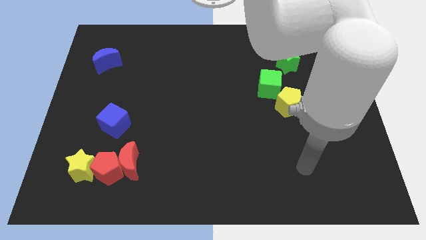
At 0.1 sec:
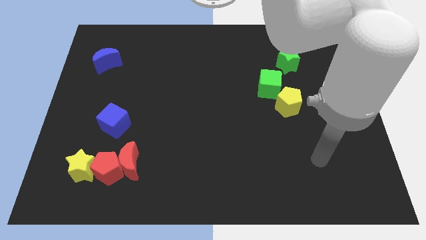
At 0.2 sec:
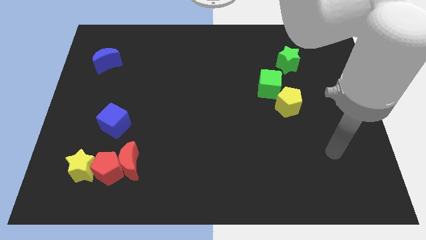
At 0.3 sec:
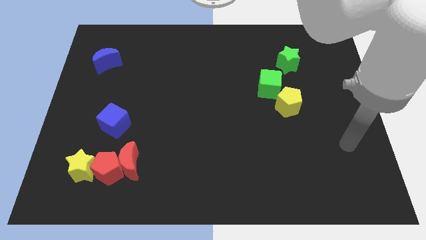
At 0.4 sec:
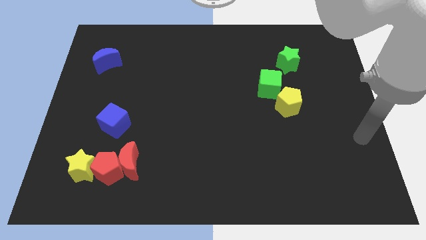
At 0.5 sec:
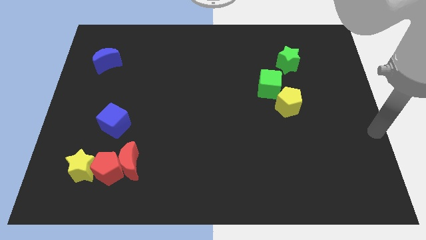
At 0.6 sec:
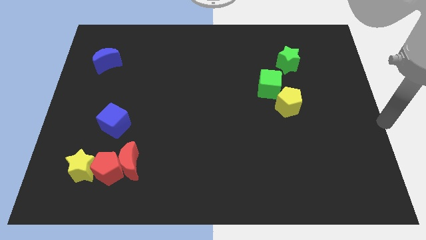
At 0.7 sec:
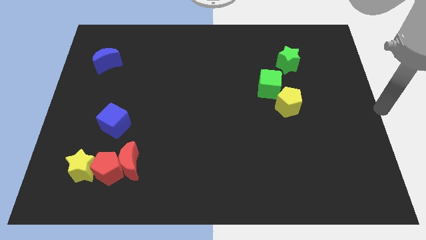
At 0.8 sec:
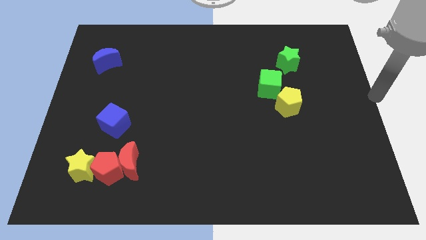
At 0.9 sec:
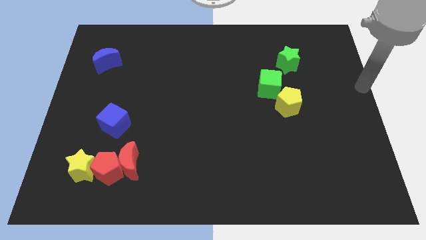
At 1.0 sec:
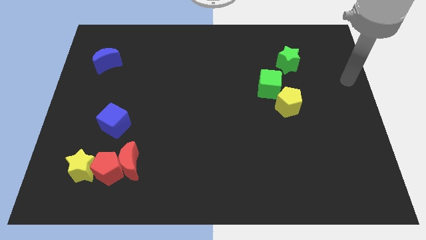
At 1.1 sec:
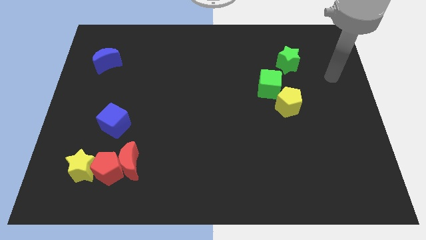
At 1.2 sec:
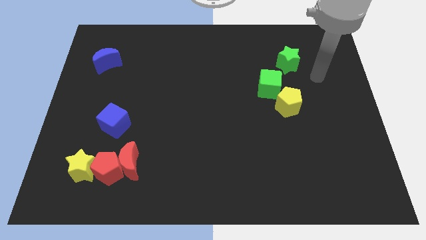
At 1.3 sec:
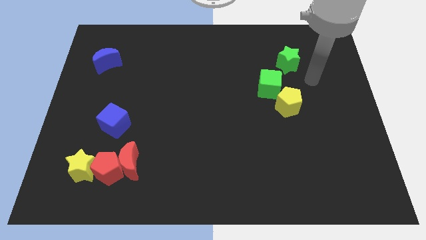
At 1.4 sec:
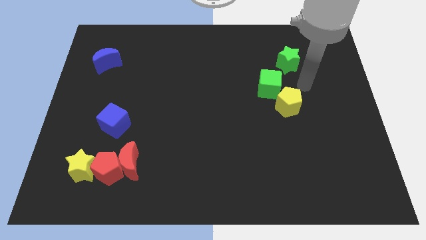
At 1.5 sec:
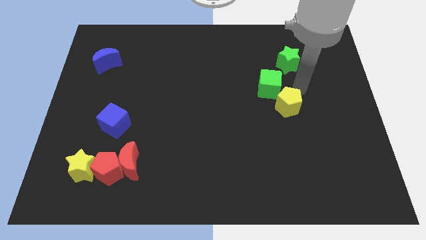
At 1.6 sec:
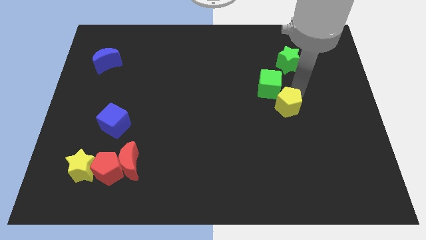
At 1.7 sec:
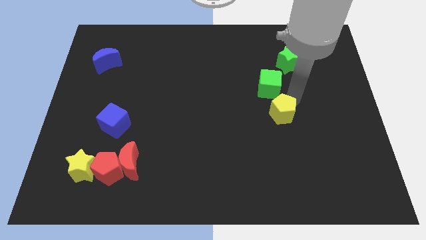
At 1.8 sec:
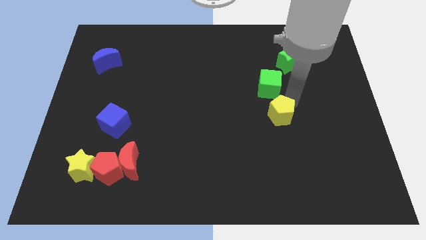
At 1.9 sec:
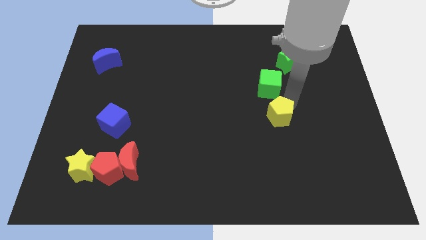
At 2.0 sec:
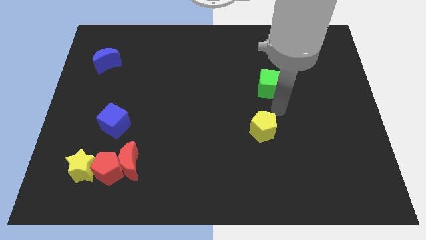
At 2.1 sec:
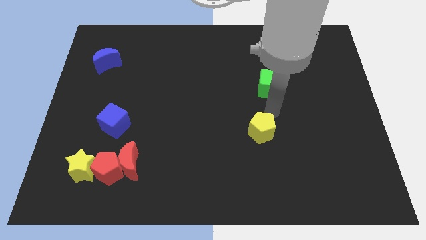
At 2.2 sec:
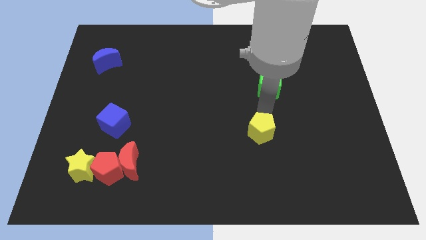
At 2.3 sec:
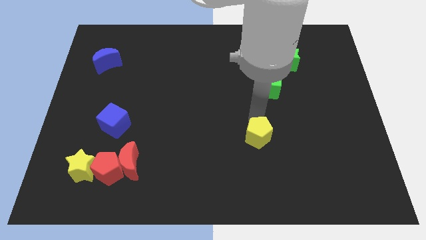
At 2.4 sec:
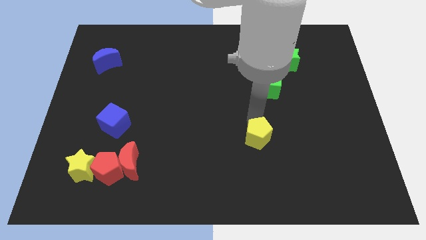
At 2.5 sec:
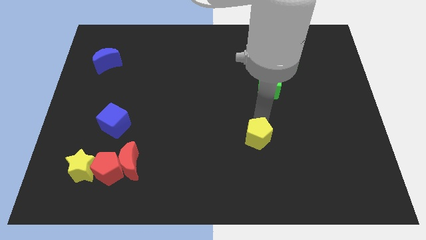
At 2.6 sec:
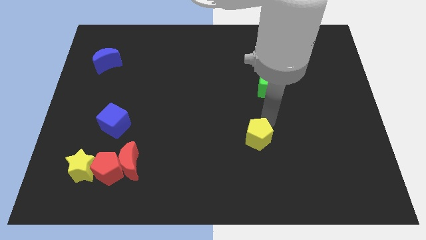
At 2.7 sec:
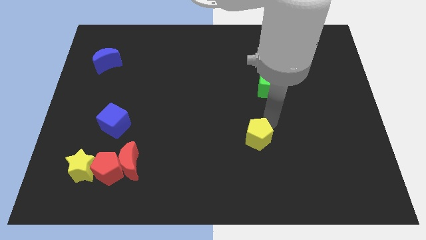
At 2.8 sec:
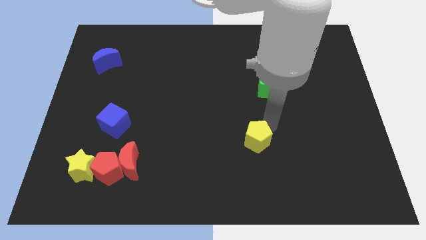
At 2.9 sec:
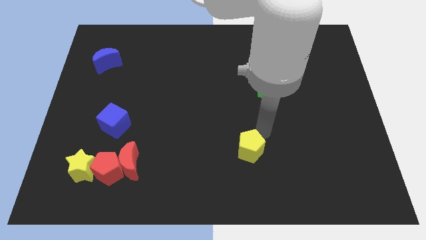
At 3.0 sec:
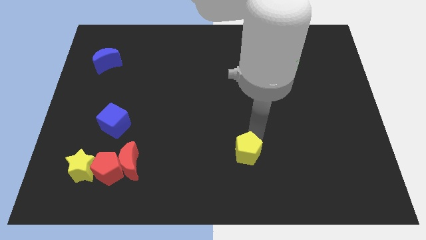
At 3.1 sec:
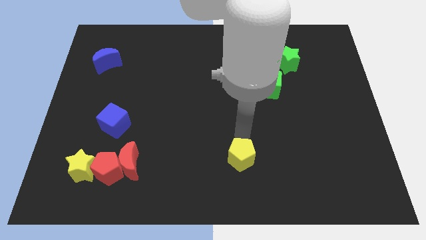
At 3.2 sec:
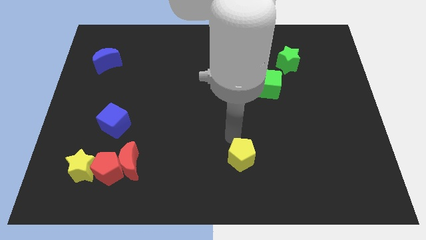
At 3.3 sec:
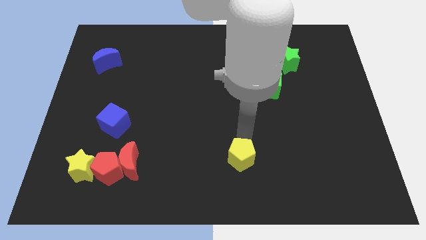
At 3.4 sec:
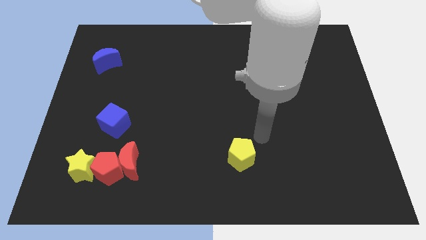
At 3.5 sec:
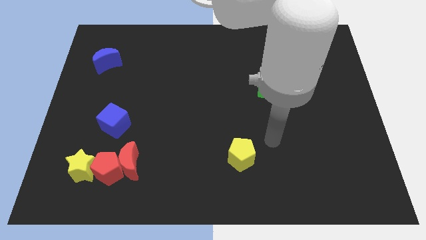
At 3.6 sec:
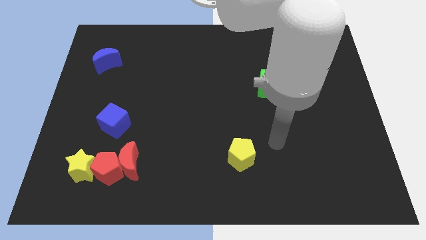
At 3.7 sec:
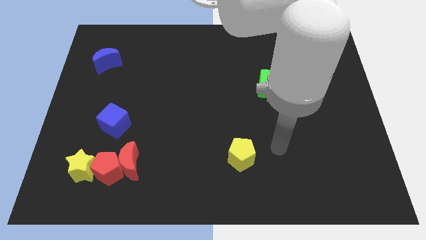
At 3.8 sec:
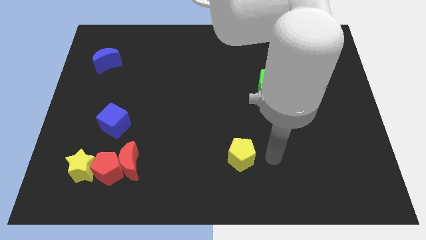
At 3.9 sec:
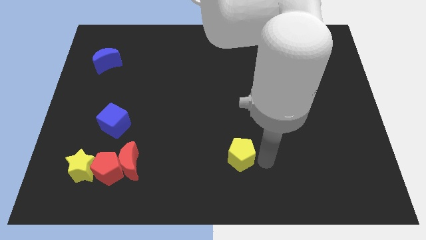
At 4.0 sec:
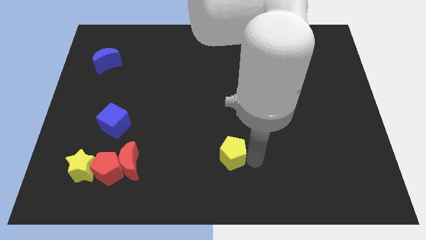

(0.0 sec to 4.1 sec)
move the yellow pentagon to the right of the red moon

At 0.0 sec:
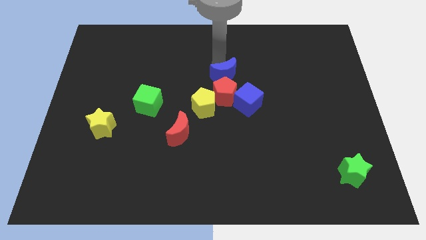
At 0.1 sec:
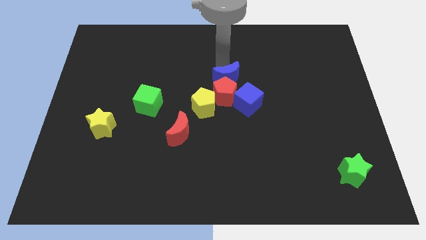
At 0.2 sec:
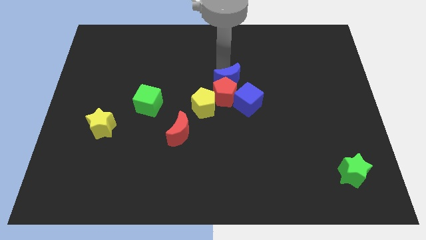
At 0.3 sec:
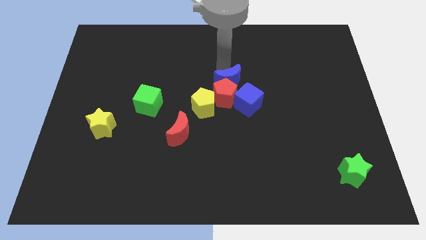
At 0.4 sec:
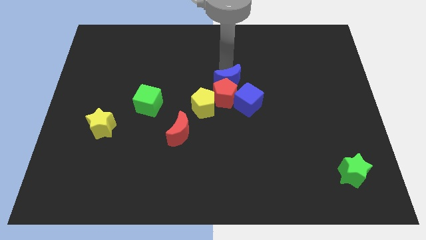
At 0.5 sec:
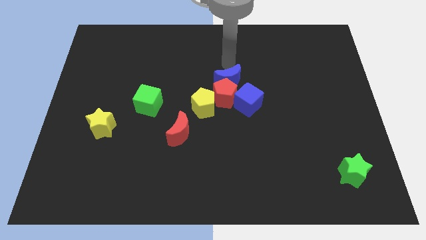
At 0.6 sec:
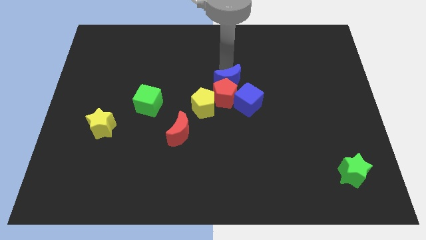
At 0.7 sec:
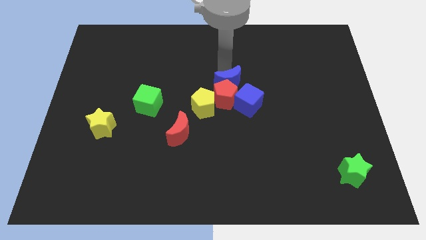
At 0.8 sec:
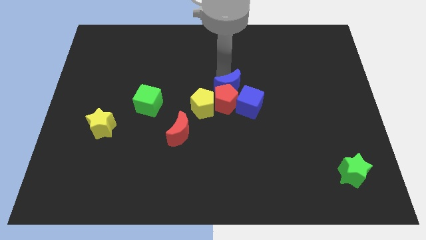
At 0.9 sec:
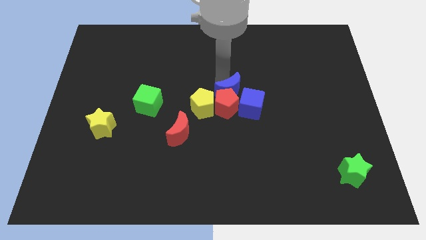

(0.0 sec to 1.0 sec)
push blue moon into red pentagon

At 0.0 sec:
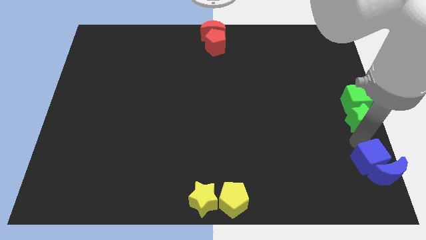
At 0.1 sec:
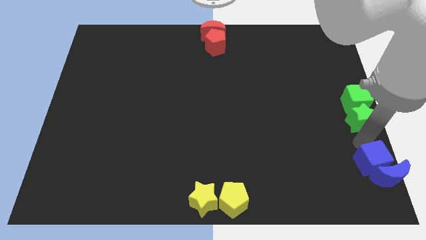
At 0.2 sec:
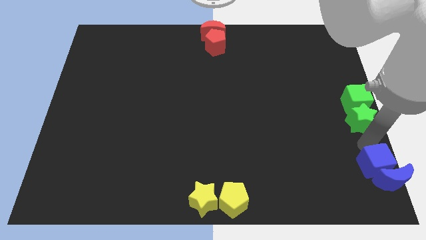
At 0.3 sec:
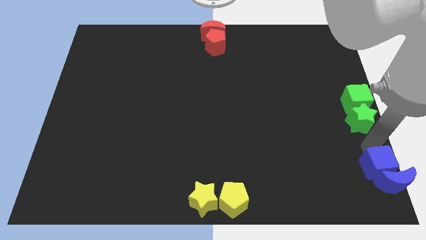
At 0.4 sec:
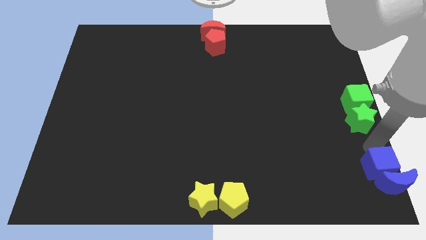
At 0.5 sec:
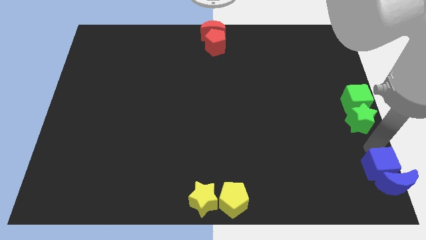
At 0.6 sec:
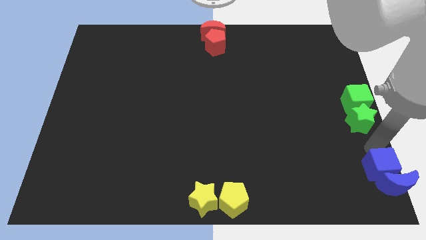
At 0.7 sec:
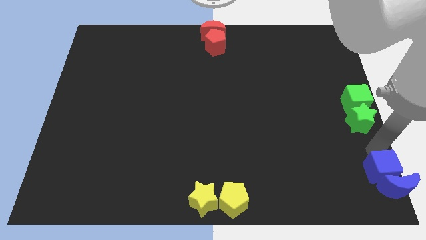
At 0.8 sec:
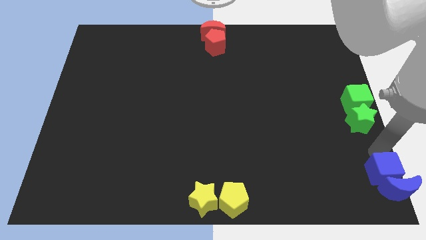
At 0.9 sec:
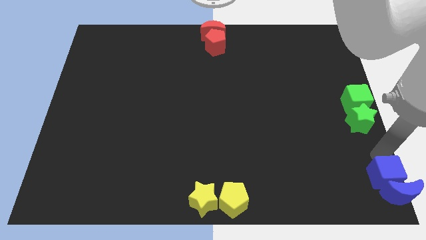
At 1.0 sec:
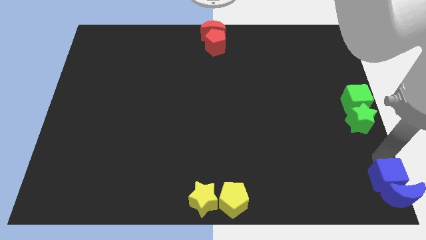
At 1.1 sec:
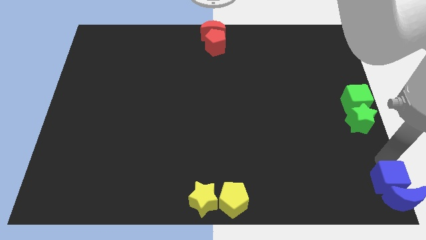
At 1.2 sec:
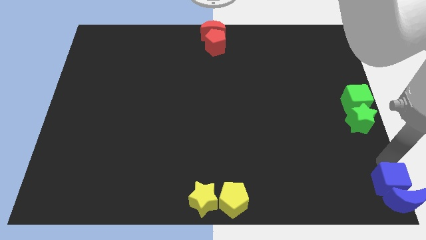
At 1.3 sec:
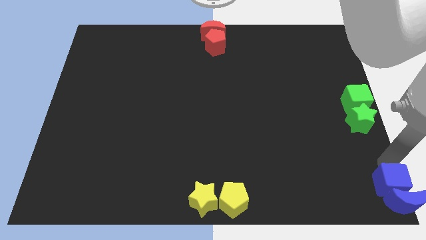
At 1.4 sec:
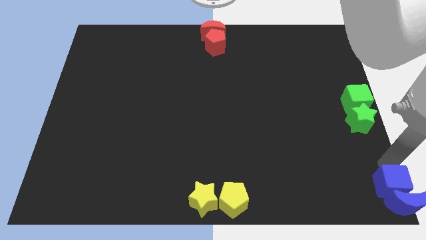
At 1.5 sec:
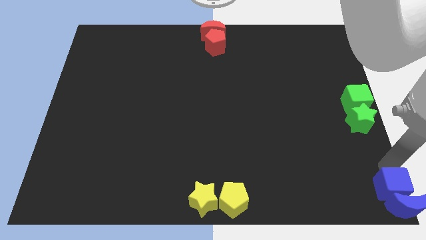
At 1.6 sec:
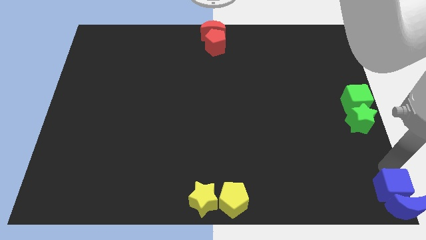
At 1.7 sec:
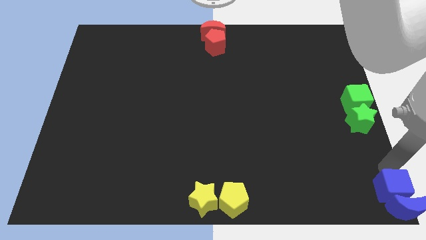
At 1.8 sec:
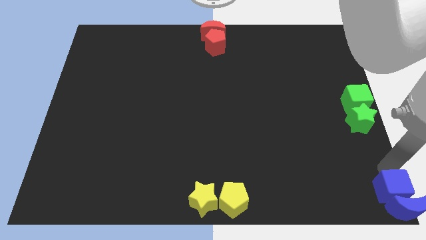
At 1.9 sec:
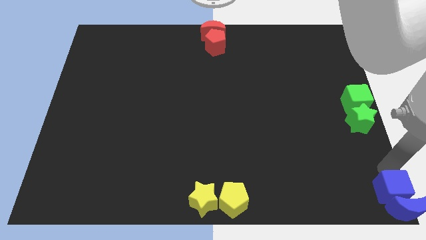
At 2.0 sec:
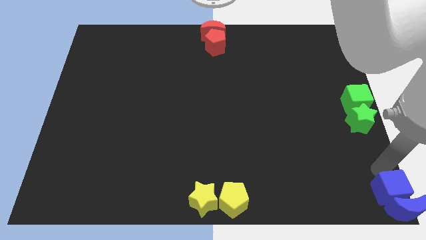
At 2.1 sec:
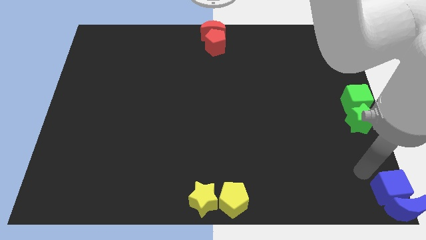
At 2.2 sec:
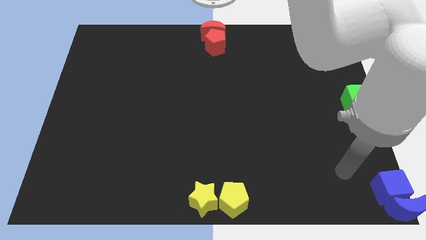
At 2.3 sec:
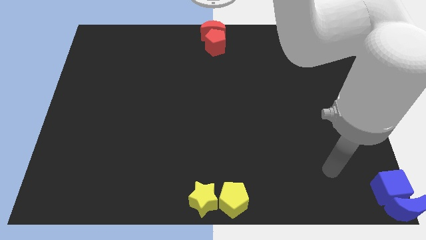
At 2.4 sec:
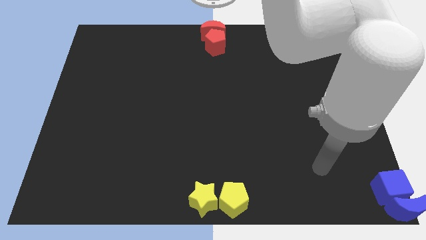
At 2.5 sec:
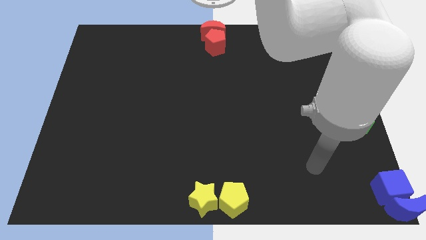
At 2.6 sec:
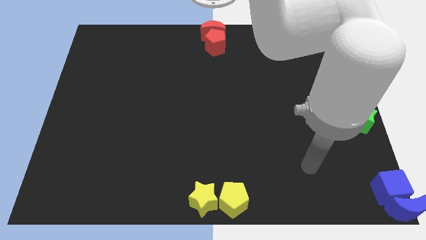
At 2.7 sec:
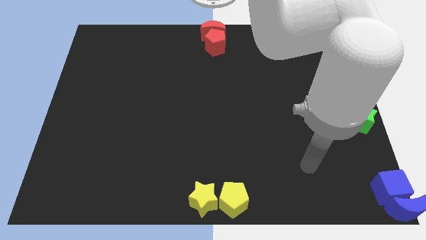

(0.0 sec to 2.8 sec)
push the blue cube and blue crescent towards the bottom right of the board

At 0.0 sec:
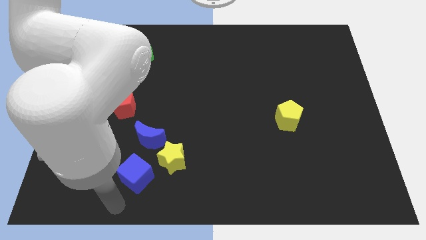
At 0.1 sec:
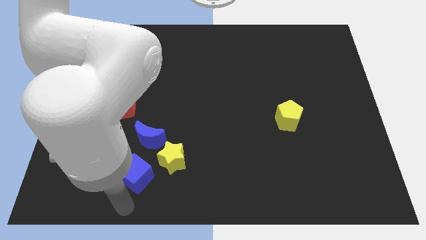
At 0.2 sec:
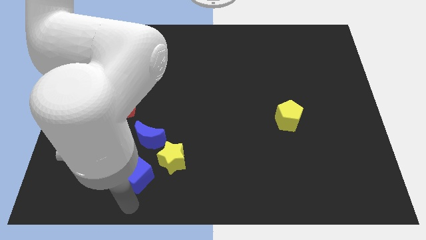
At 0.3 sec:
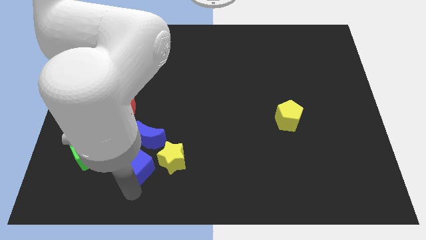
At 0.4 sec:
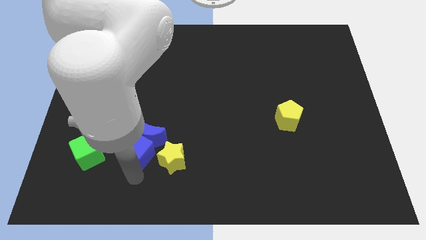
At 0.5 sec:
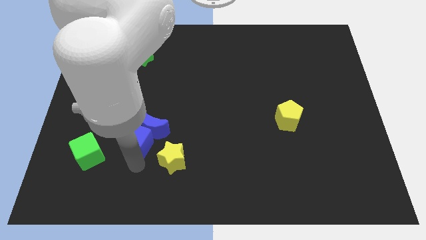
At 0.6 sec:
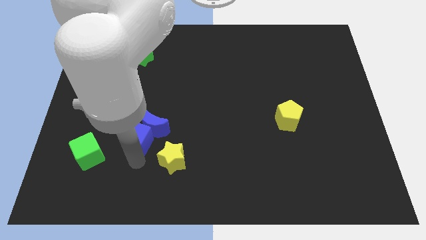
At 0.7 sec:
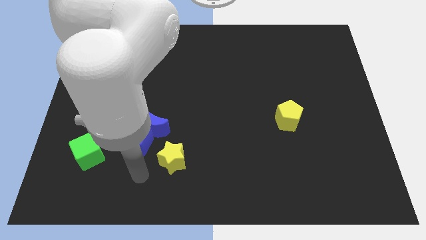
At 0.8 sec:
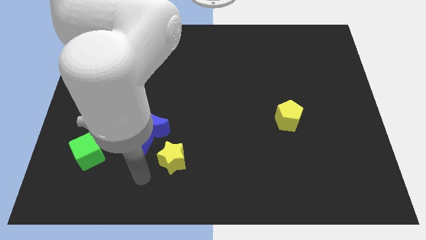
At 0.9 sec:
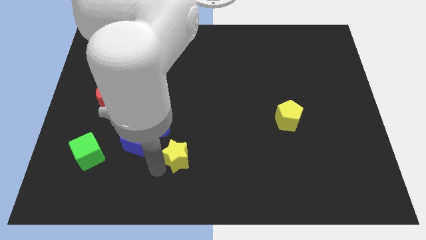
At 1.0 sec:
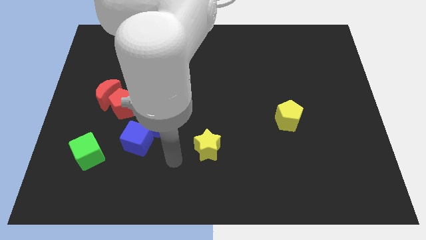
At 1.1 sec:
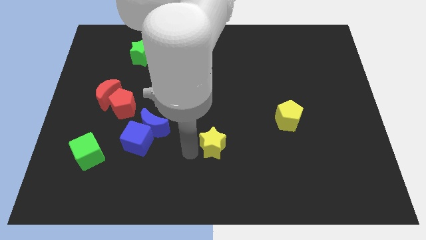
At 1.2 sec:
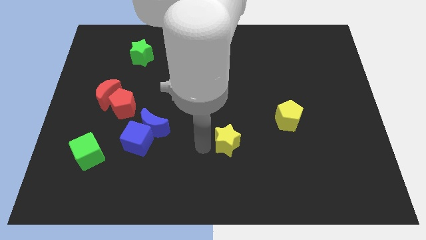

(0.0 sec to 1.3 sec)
move the blue cube into the blue moon
